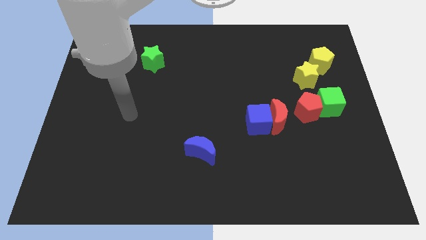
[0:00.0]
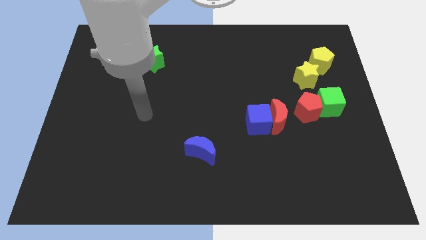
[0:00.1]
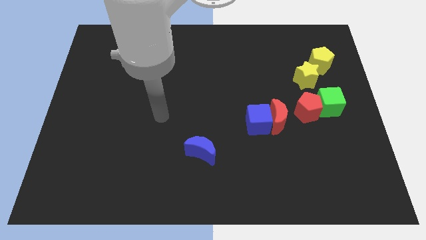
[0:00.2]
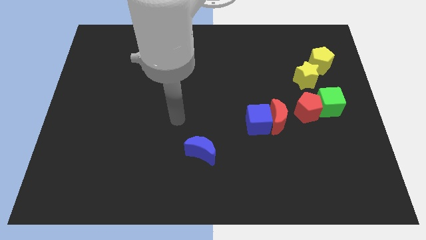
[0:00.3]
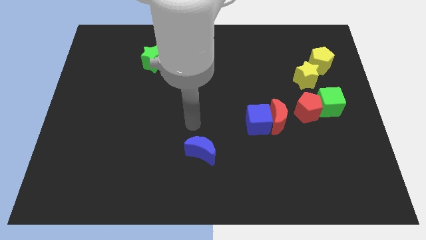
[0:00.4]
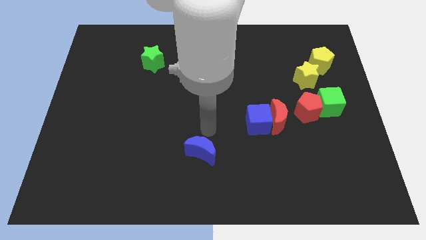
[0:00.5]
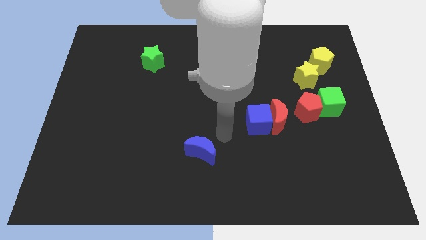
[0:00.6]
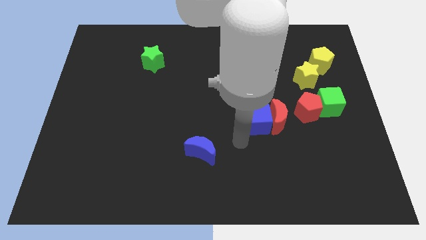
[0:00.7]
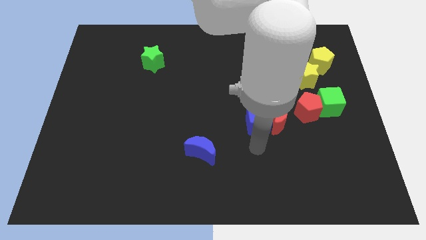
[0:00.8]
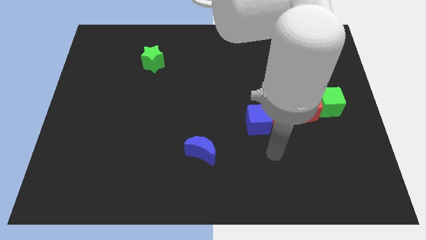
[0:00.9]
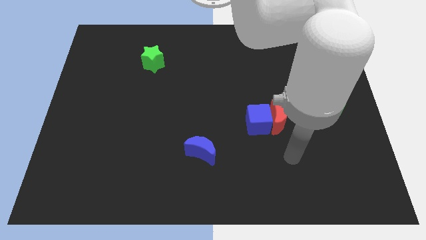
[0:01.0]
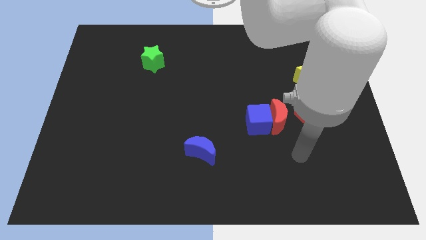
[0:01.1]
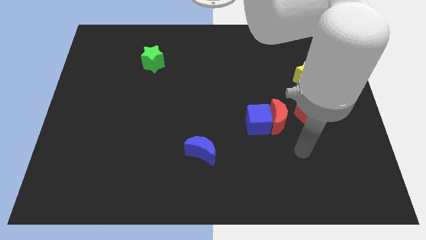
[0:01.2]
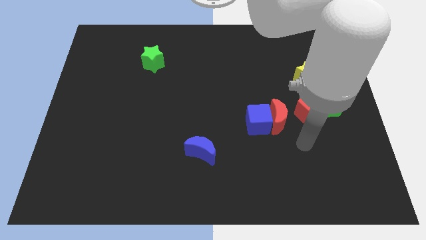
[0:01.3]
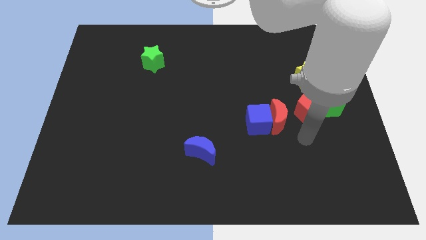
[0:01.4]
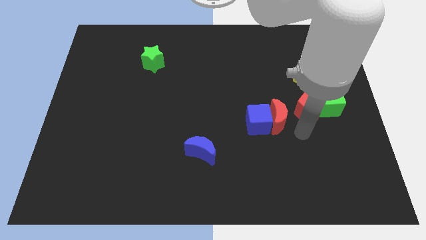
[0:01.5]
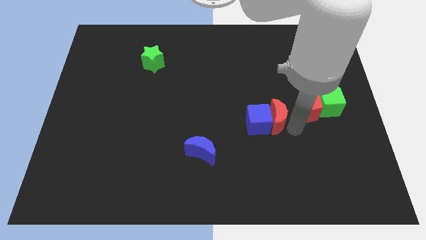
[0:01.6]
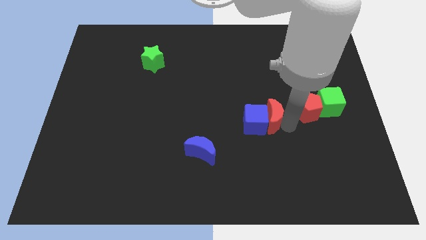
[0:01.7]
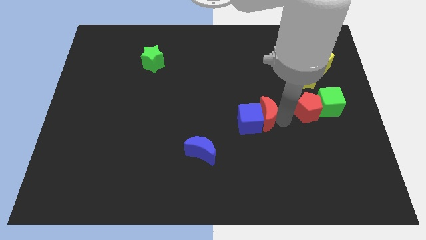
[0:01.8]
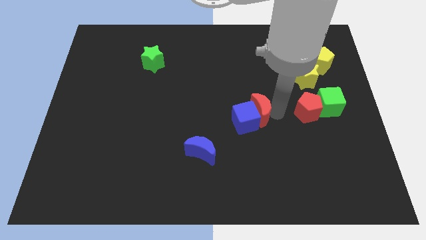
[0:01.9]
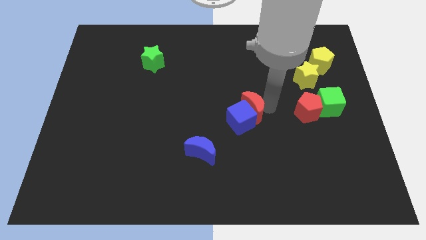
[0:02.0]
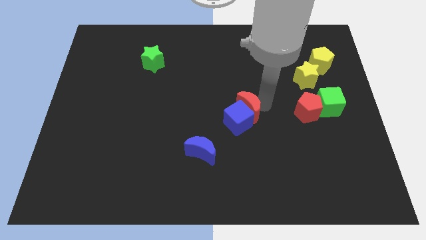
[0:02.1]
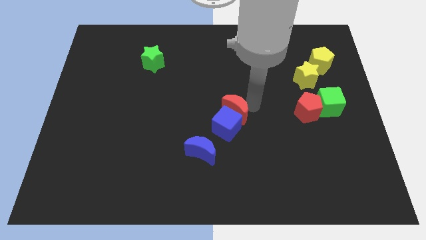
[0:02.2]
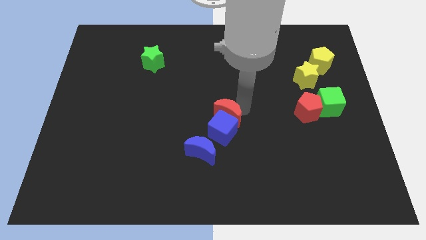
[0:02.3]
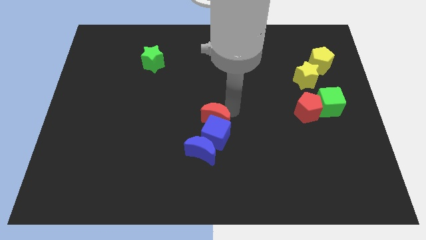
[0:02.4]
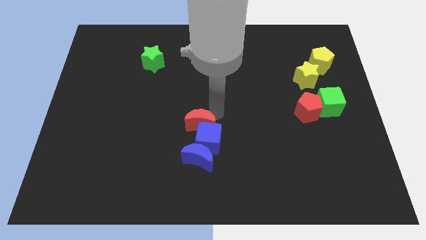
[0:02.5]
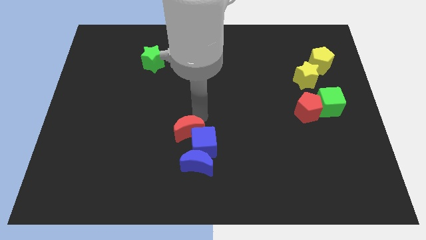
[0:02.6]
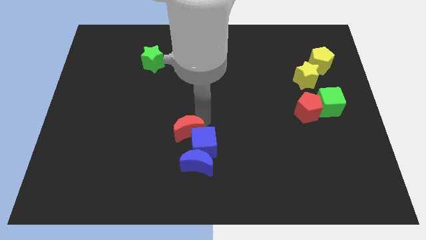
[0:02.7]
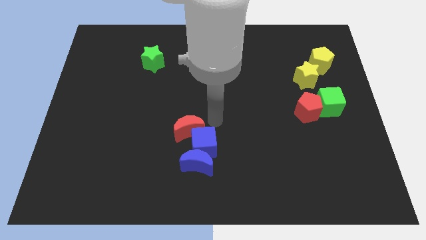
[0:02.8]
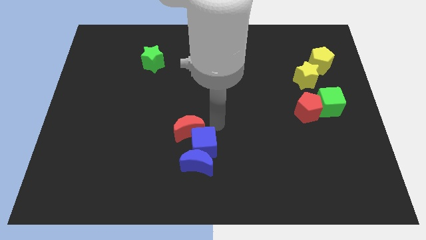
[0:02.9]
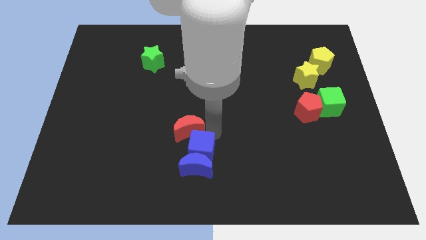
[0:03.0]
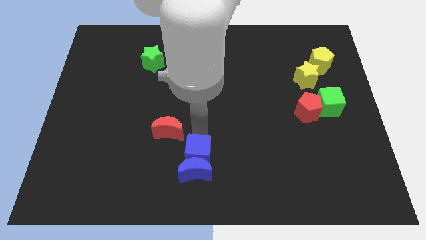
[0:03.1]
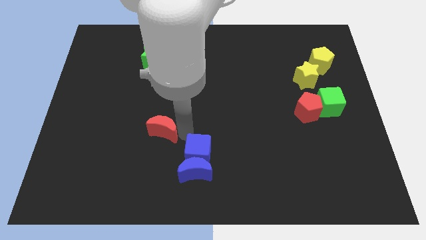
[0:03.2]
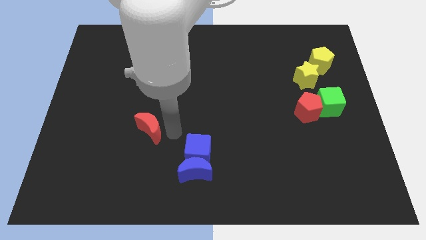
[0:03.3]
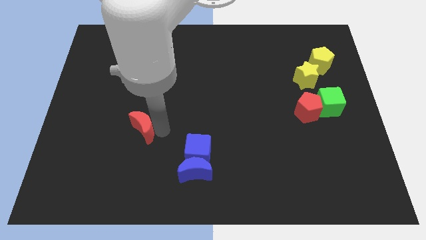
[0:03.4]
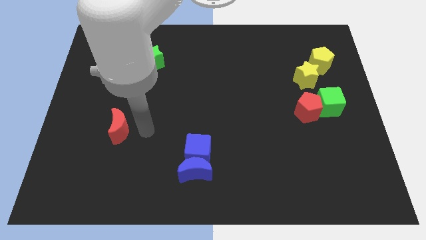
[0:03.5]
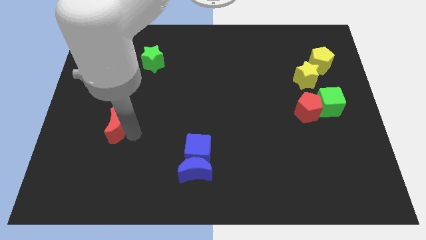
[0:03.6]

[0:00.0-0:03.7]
seperate red moon and blue cube

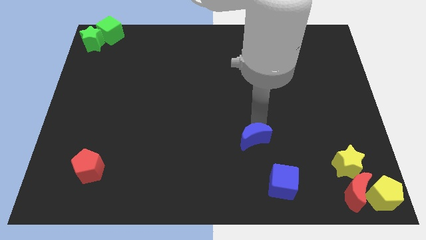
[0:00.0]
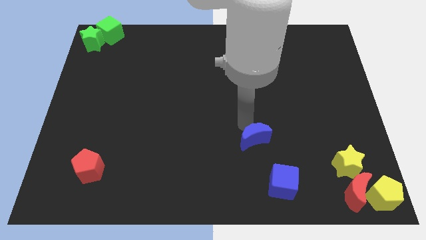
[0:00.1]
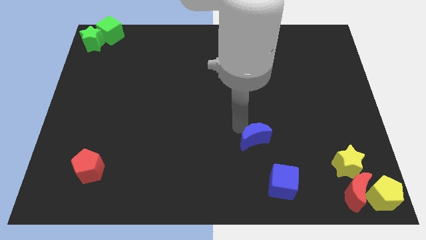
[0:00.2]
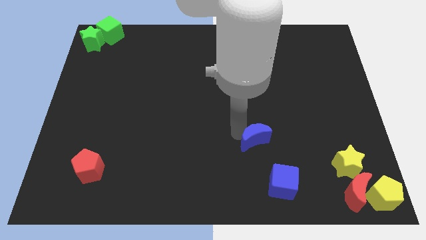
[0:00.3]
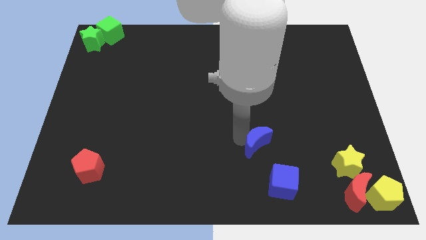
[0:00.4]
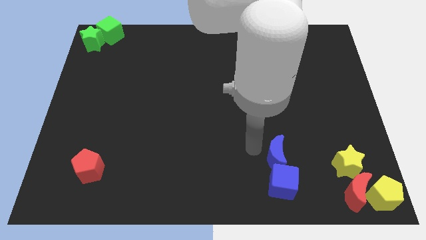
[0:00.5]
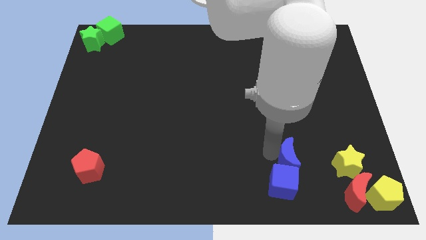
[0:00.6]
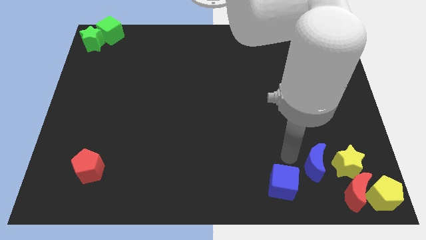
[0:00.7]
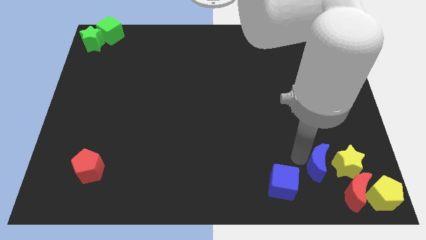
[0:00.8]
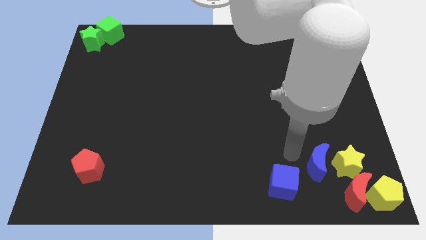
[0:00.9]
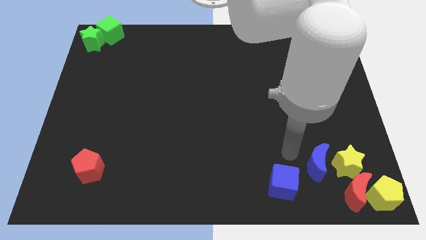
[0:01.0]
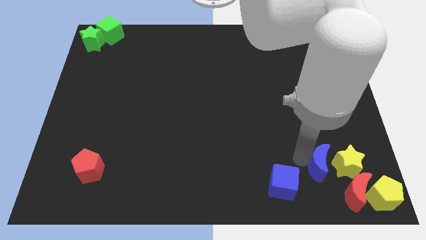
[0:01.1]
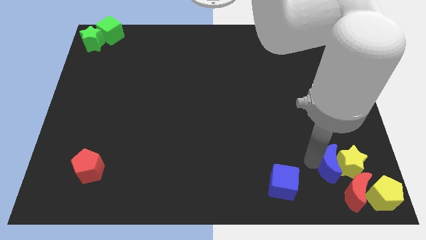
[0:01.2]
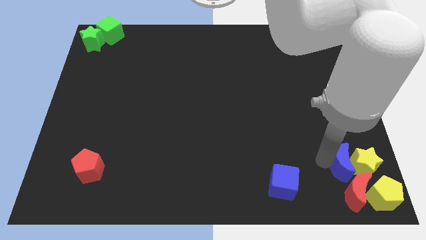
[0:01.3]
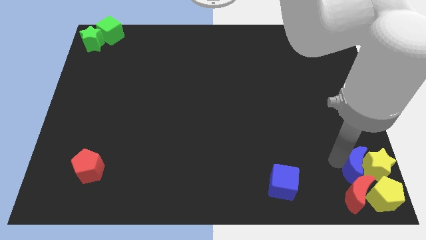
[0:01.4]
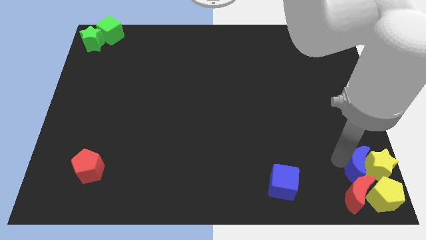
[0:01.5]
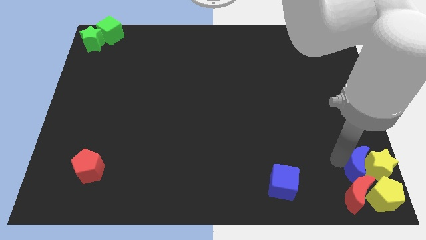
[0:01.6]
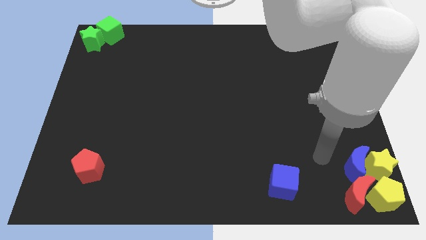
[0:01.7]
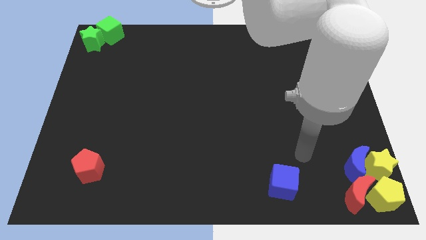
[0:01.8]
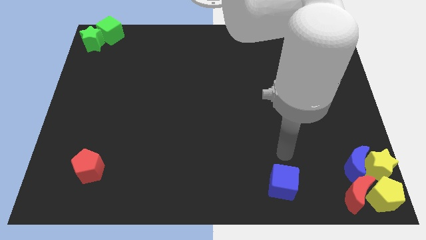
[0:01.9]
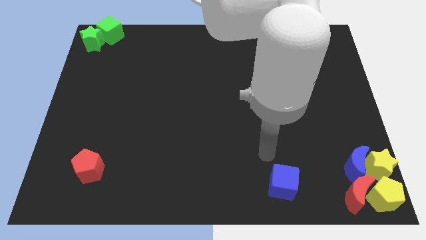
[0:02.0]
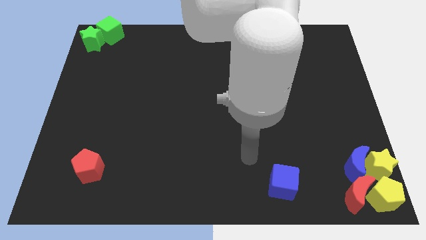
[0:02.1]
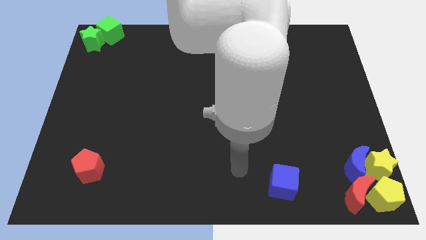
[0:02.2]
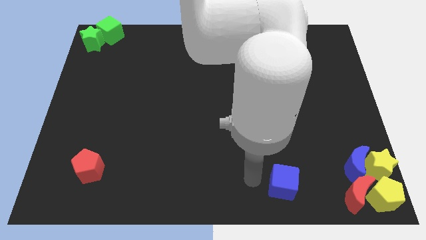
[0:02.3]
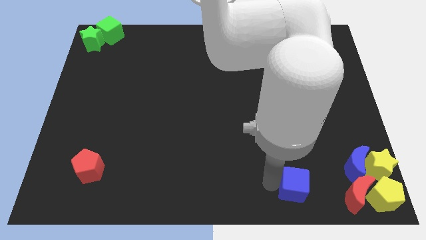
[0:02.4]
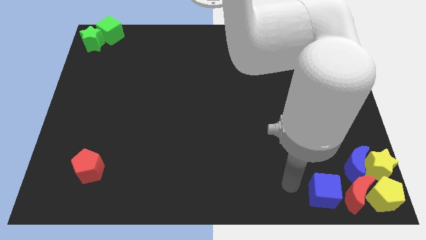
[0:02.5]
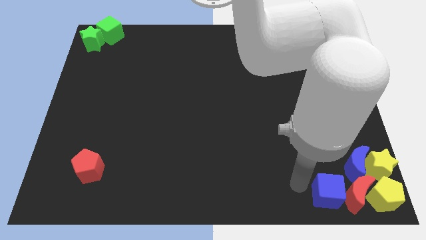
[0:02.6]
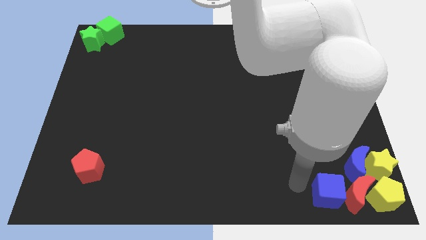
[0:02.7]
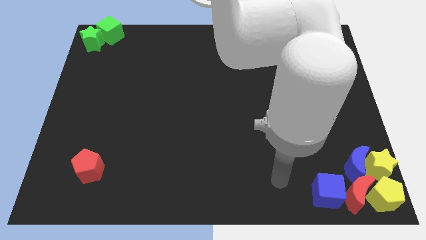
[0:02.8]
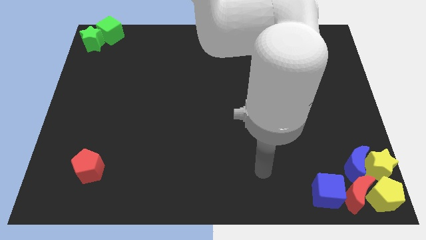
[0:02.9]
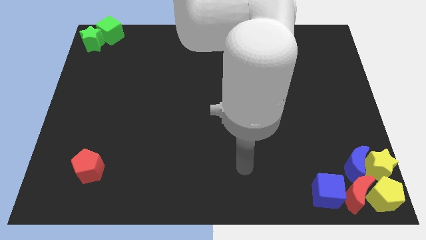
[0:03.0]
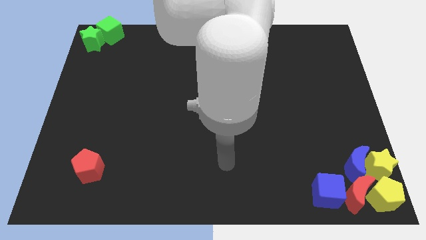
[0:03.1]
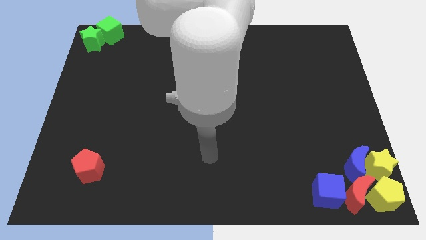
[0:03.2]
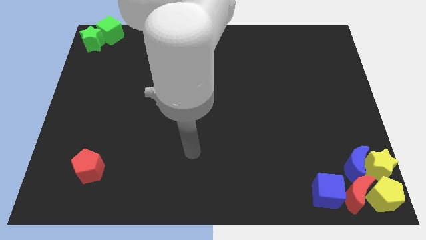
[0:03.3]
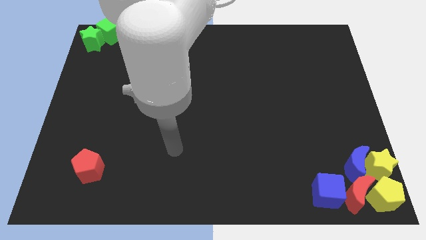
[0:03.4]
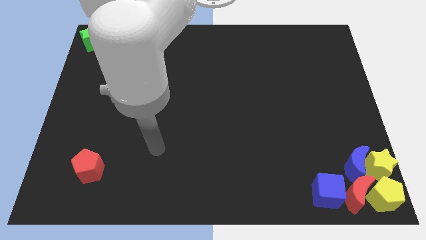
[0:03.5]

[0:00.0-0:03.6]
push the blue cube into the left of the red crescent

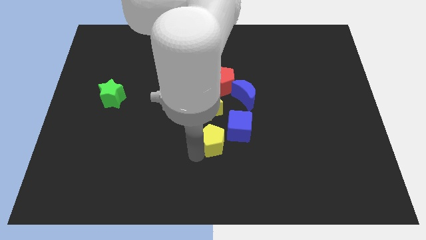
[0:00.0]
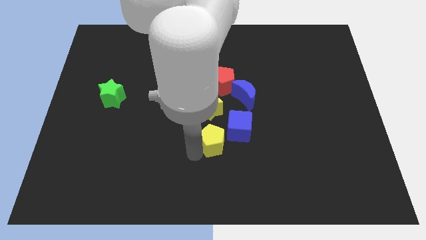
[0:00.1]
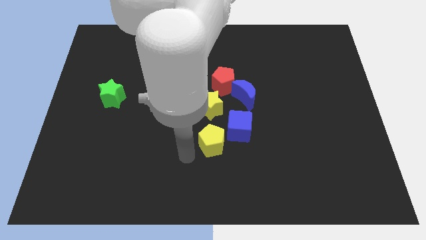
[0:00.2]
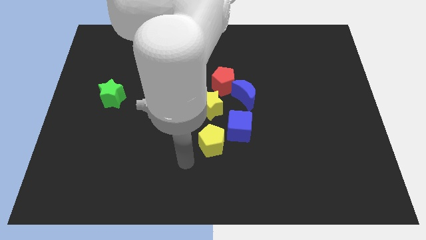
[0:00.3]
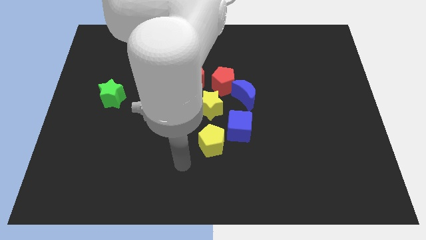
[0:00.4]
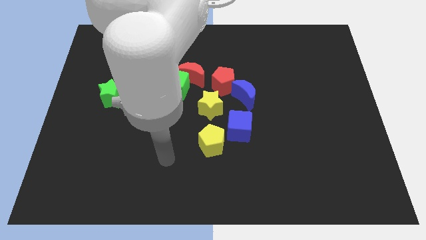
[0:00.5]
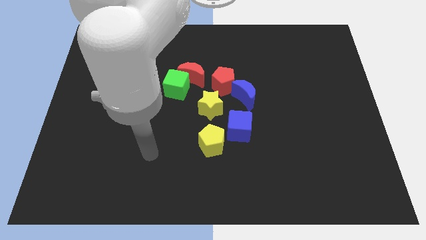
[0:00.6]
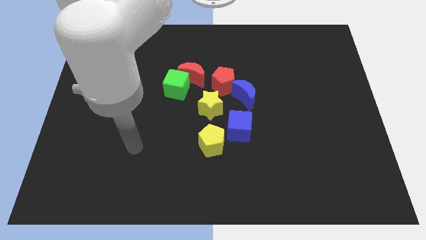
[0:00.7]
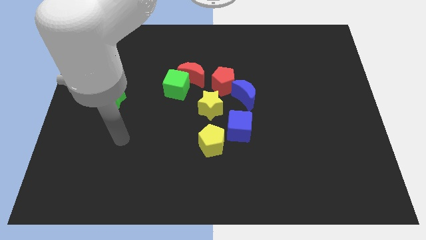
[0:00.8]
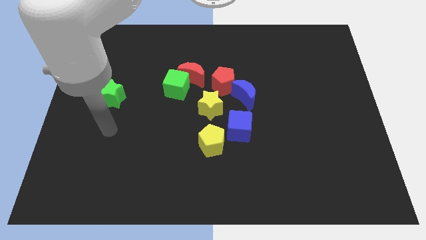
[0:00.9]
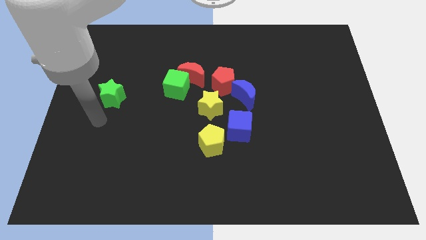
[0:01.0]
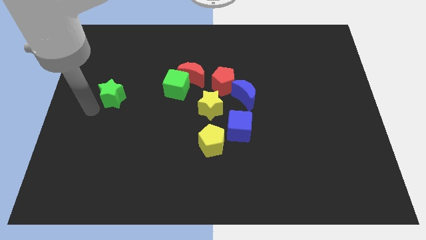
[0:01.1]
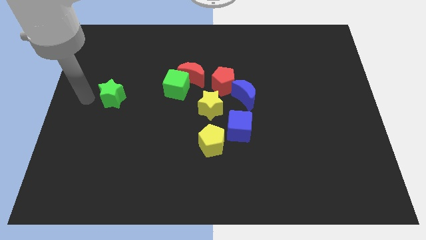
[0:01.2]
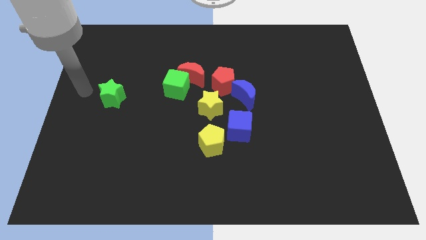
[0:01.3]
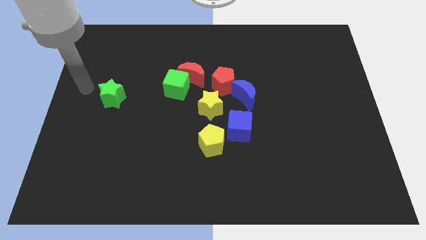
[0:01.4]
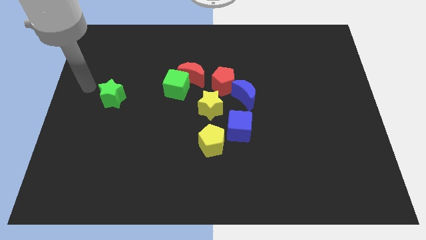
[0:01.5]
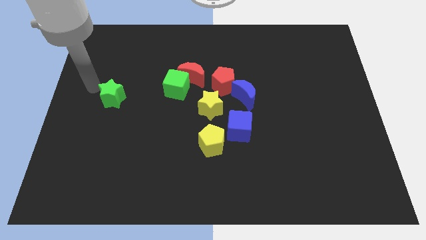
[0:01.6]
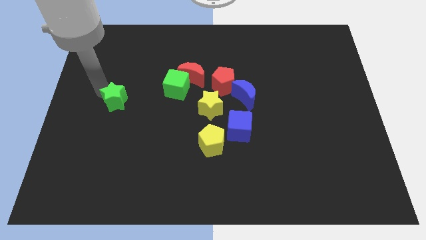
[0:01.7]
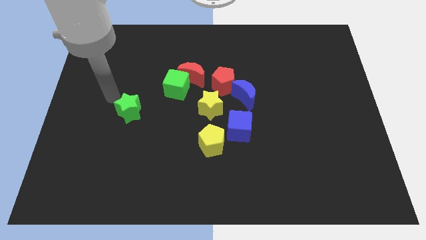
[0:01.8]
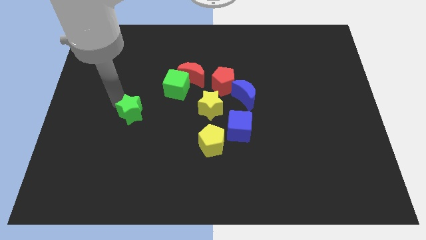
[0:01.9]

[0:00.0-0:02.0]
move your arm towards the green star
